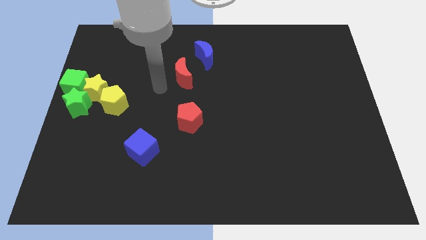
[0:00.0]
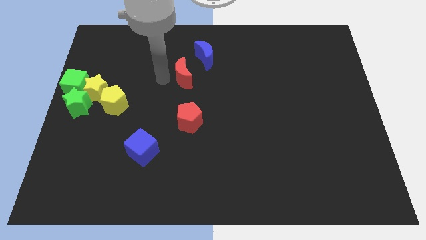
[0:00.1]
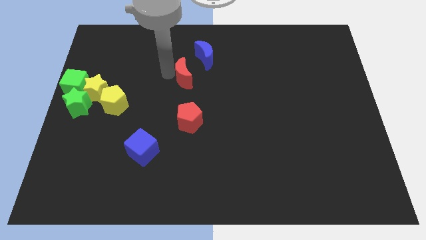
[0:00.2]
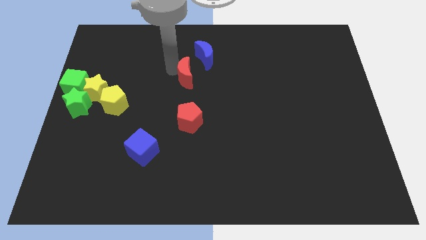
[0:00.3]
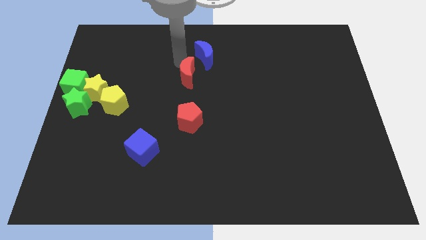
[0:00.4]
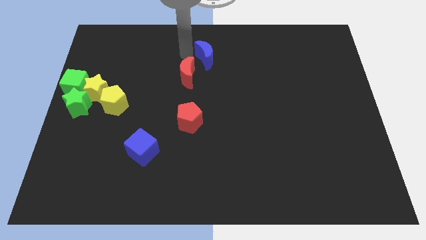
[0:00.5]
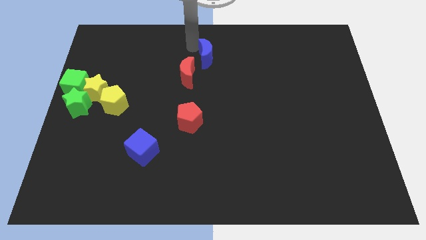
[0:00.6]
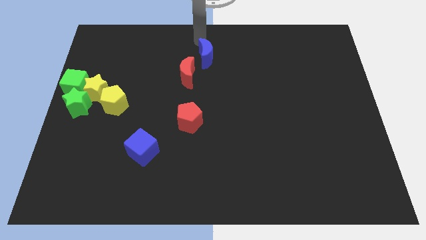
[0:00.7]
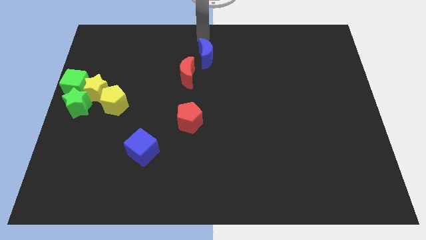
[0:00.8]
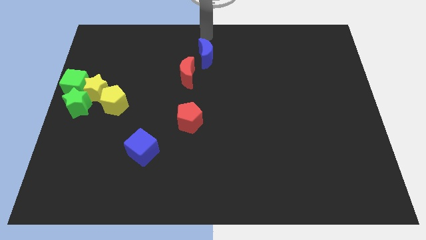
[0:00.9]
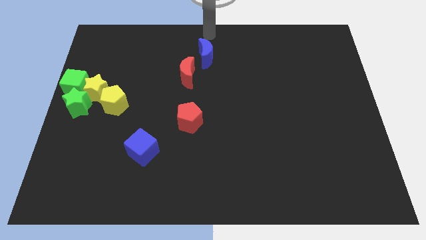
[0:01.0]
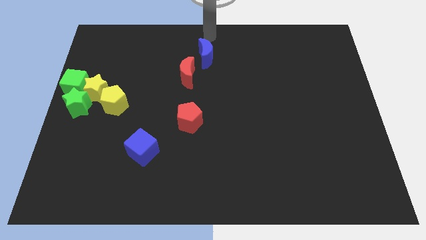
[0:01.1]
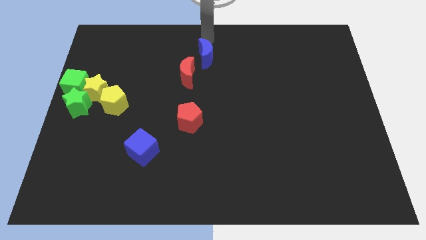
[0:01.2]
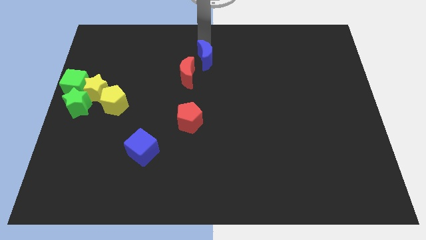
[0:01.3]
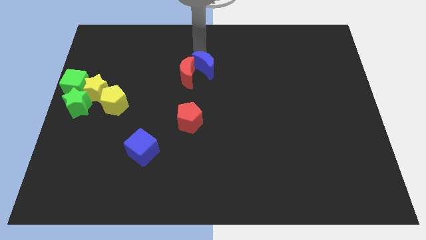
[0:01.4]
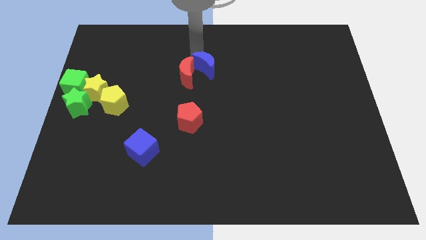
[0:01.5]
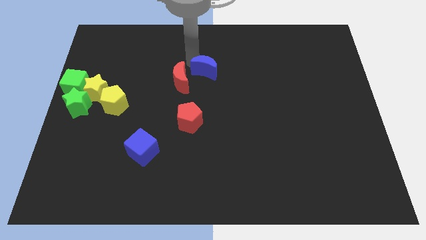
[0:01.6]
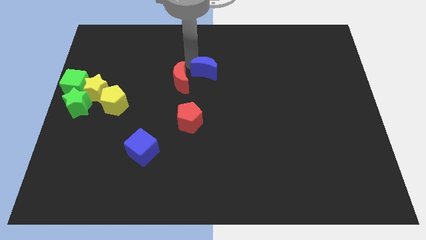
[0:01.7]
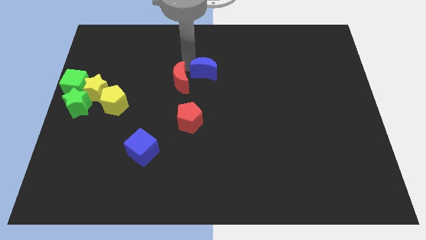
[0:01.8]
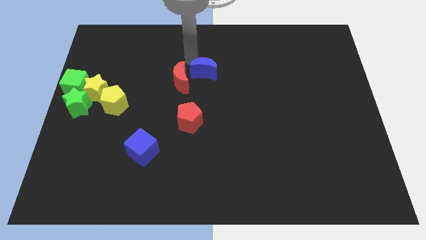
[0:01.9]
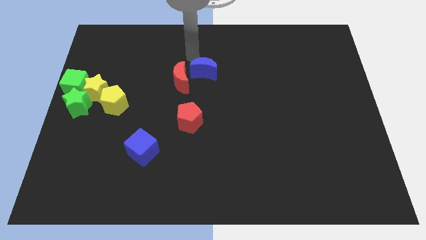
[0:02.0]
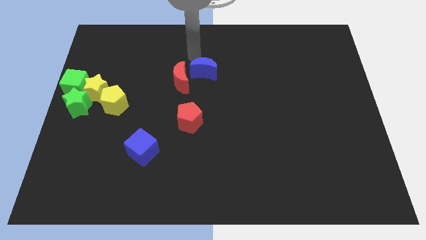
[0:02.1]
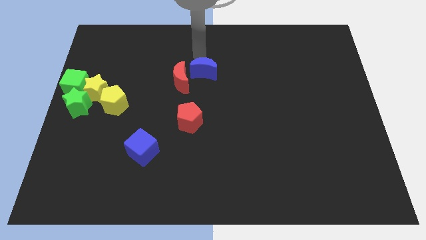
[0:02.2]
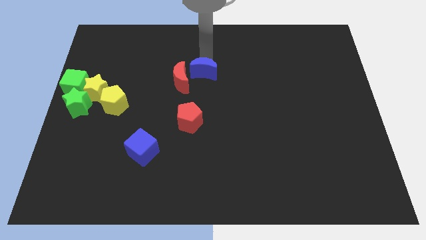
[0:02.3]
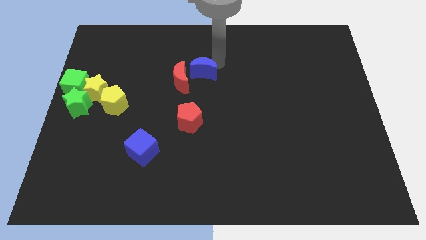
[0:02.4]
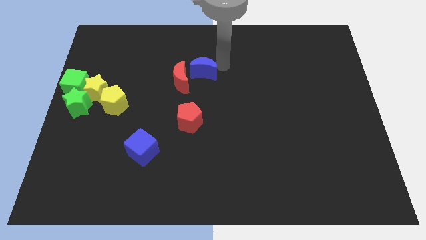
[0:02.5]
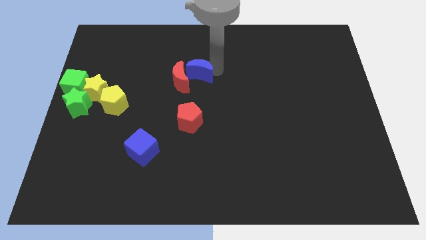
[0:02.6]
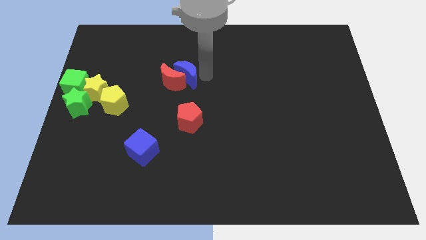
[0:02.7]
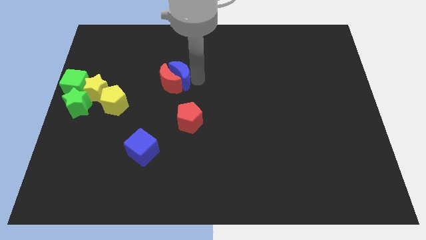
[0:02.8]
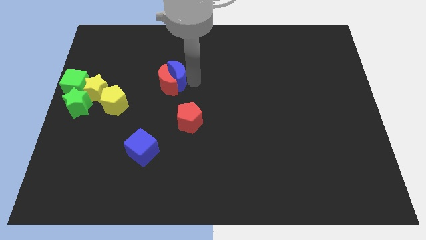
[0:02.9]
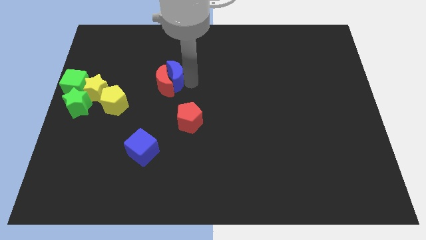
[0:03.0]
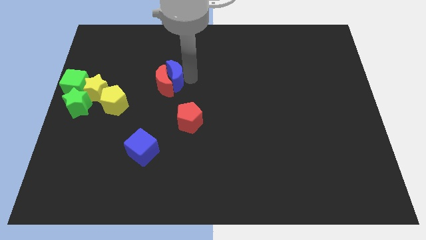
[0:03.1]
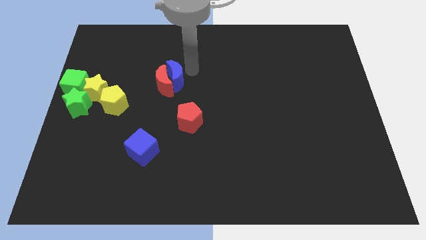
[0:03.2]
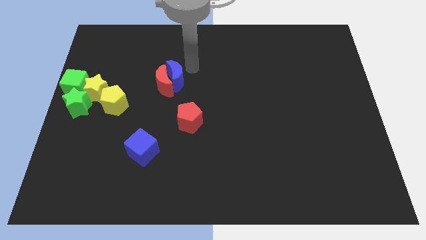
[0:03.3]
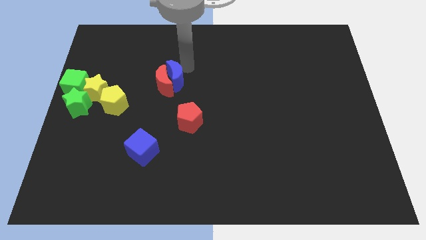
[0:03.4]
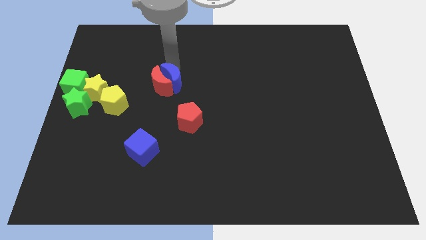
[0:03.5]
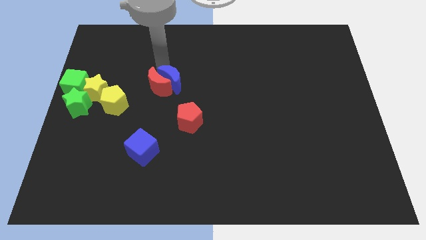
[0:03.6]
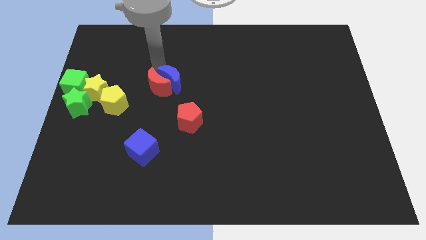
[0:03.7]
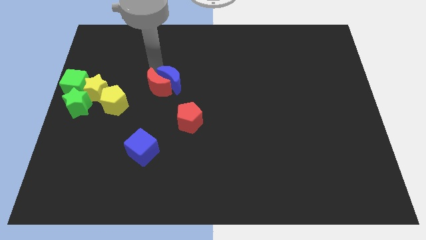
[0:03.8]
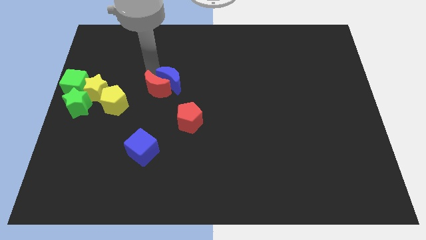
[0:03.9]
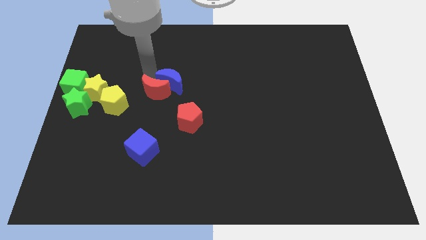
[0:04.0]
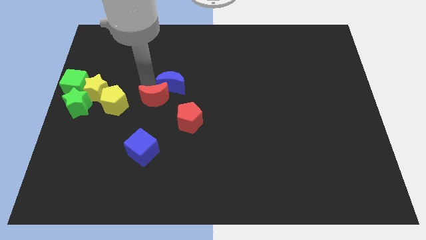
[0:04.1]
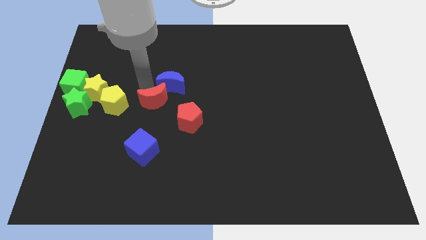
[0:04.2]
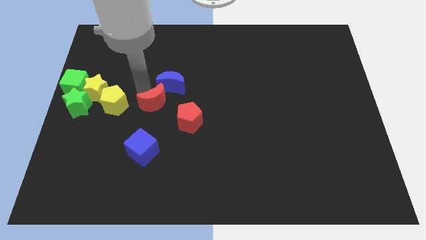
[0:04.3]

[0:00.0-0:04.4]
push the blue and red crescents towards the yellow pentagon

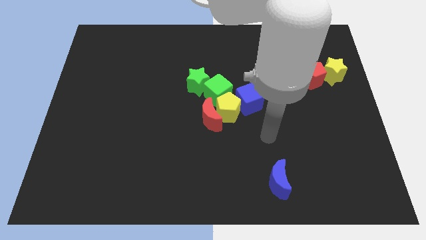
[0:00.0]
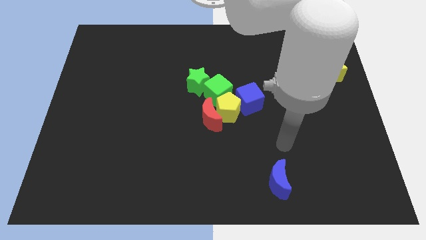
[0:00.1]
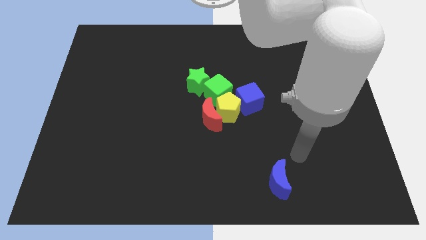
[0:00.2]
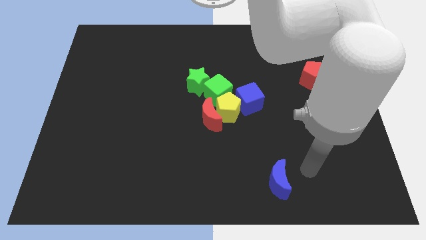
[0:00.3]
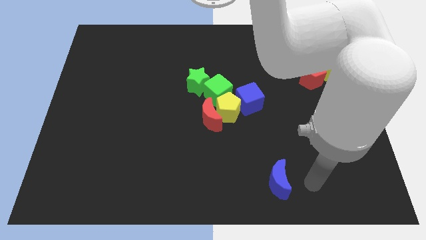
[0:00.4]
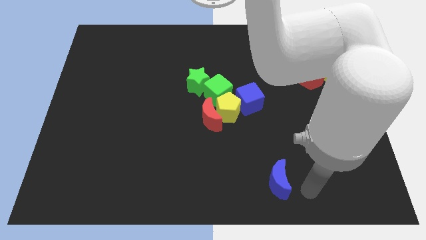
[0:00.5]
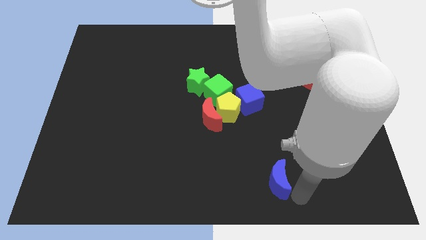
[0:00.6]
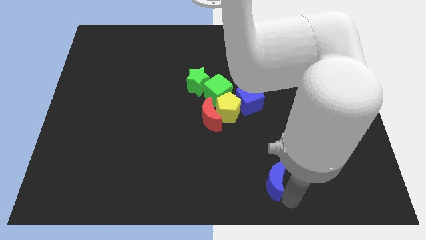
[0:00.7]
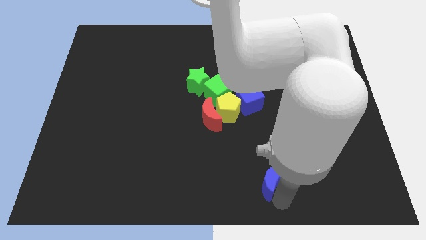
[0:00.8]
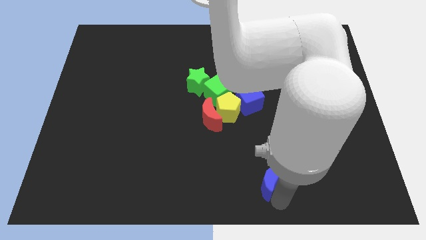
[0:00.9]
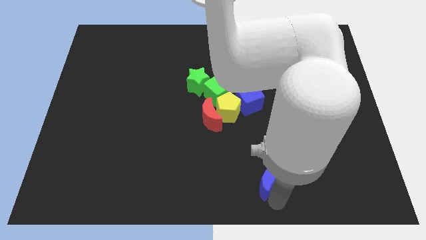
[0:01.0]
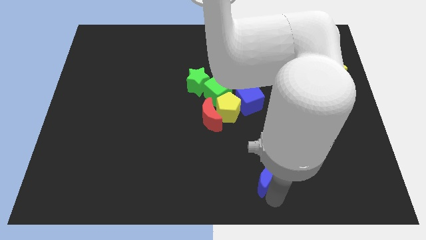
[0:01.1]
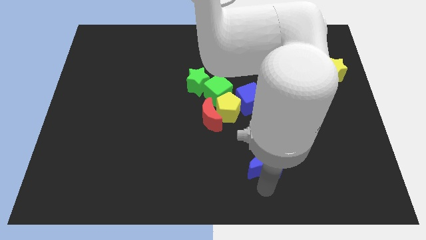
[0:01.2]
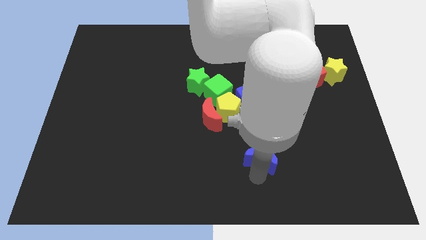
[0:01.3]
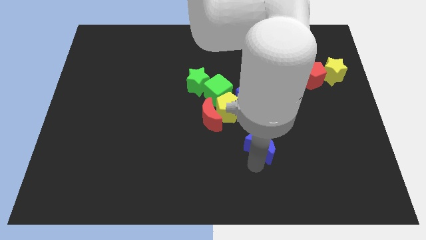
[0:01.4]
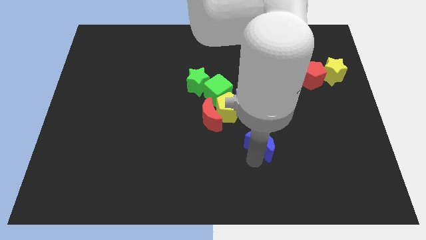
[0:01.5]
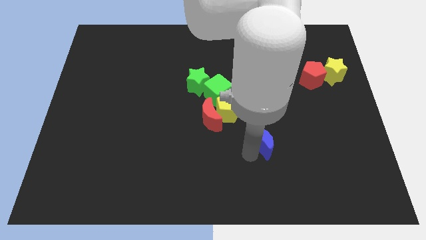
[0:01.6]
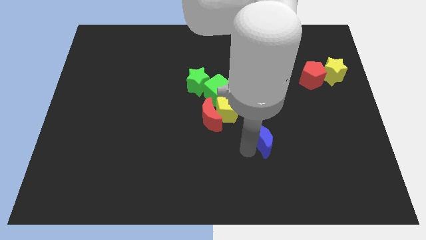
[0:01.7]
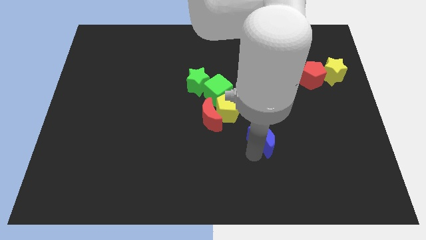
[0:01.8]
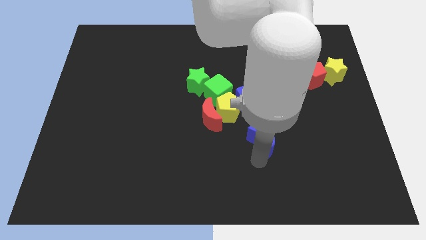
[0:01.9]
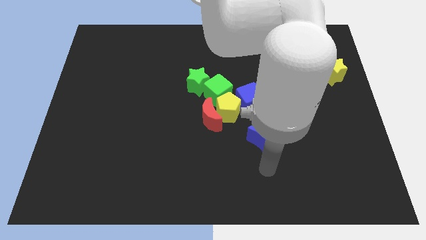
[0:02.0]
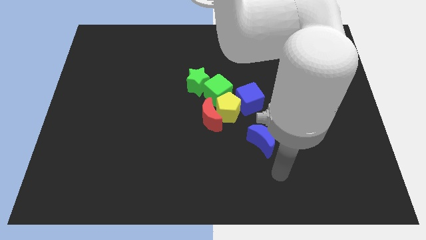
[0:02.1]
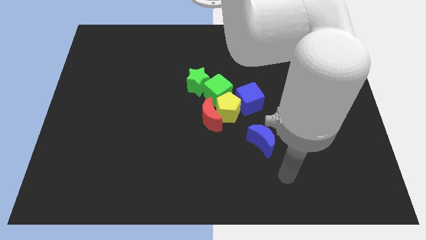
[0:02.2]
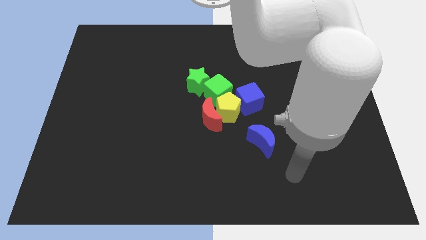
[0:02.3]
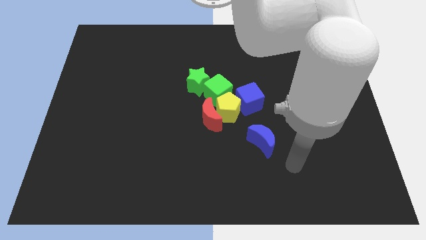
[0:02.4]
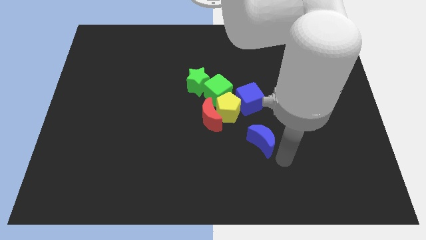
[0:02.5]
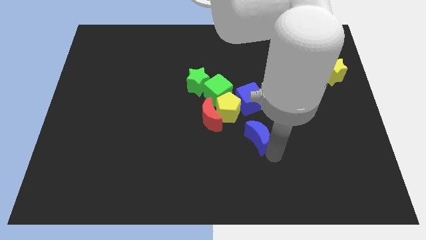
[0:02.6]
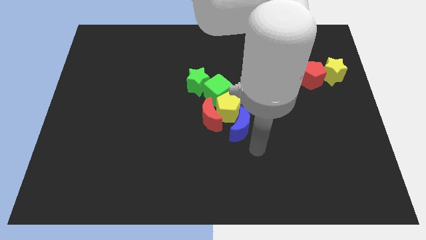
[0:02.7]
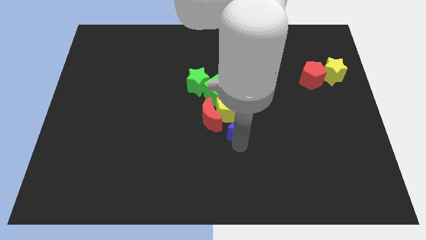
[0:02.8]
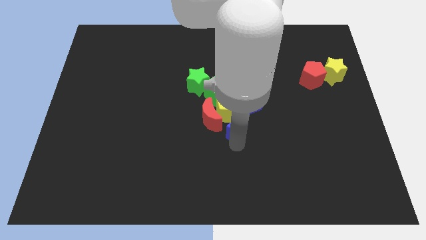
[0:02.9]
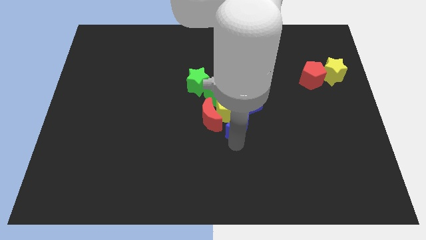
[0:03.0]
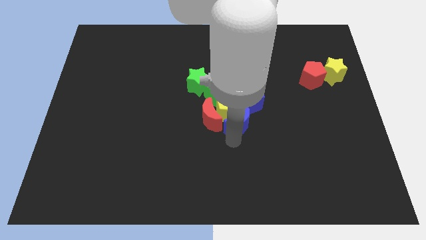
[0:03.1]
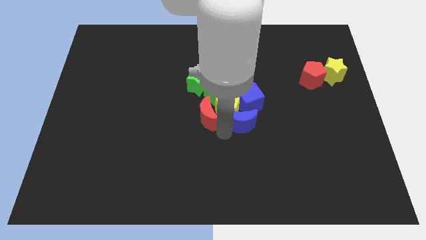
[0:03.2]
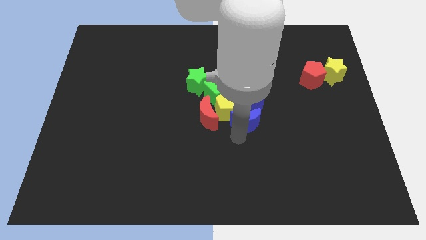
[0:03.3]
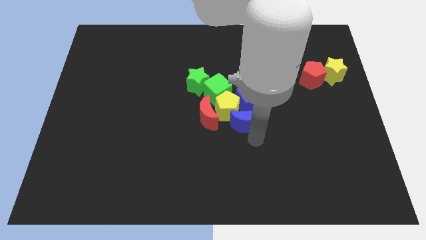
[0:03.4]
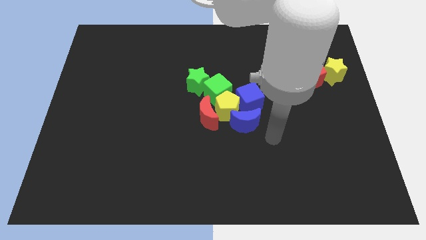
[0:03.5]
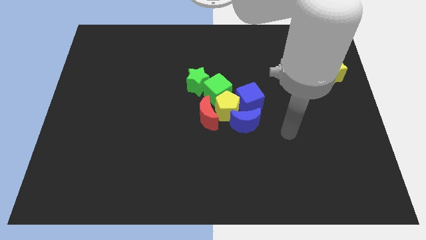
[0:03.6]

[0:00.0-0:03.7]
place blue crescent down to the yellow pentagon

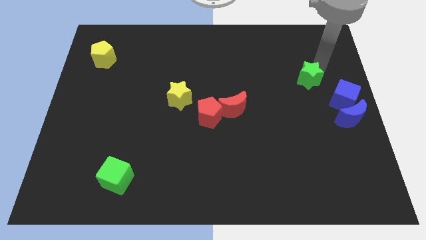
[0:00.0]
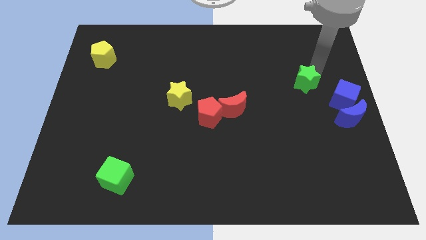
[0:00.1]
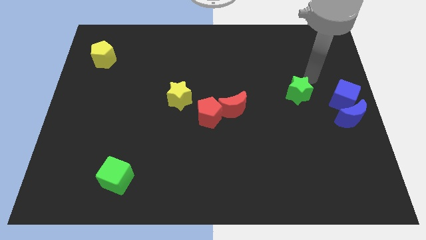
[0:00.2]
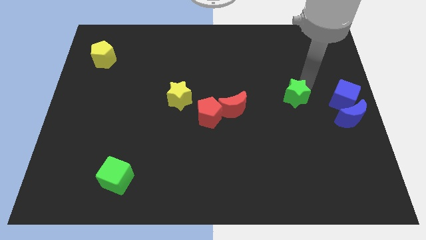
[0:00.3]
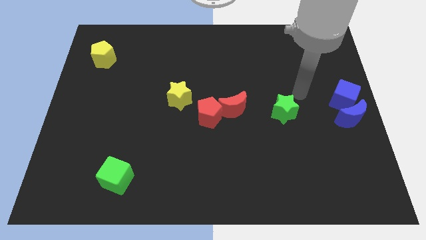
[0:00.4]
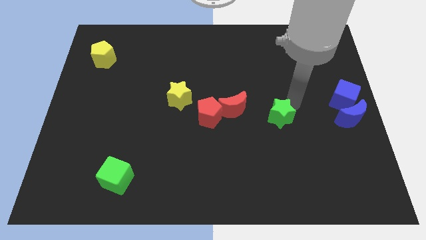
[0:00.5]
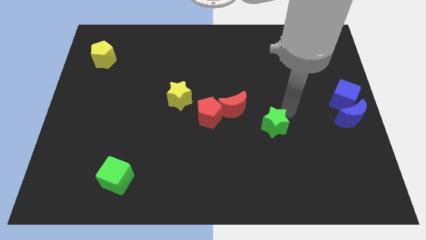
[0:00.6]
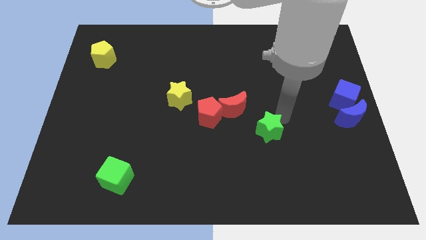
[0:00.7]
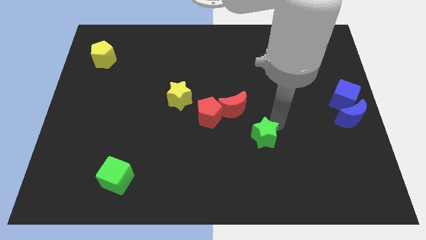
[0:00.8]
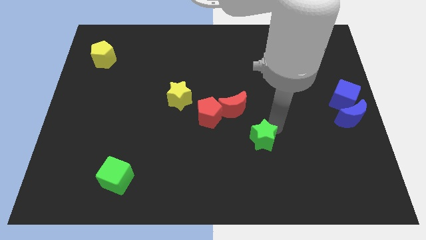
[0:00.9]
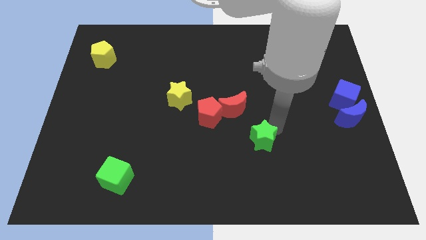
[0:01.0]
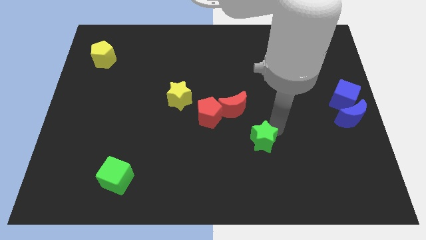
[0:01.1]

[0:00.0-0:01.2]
move the green star diagonally to the red moon
